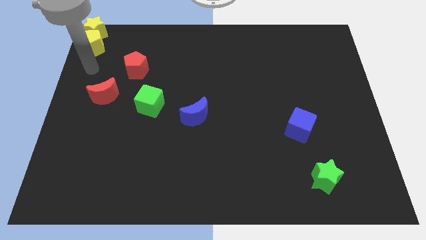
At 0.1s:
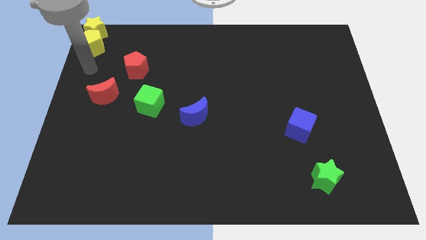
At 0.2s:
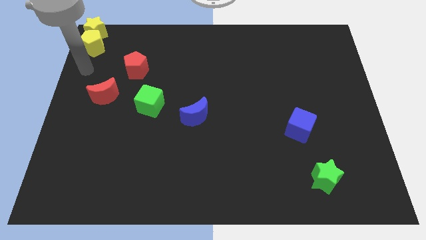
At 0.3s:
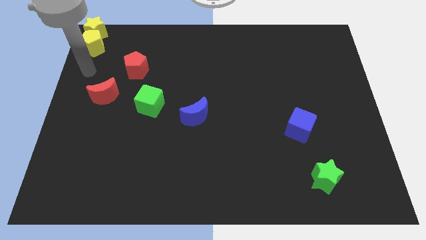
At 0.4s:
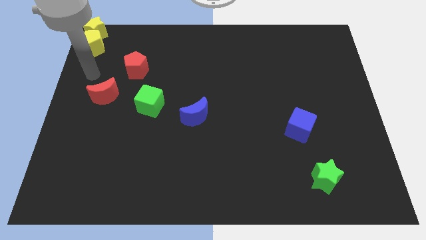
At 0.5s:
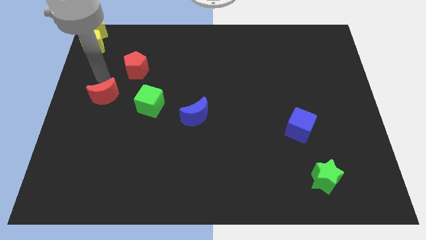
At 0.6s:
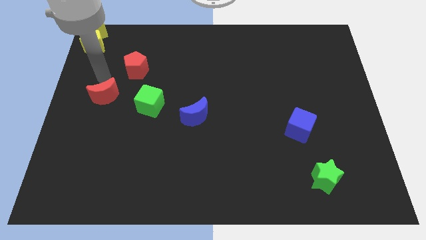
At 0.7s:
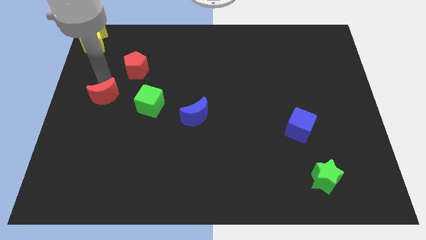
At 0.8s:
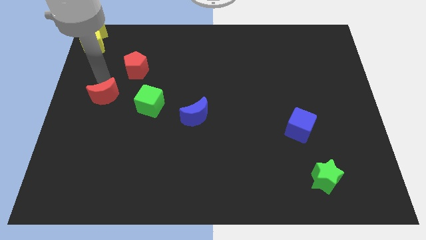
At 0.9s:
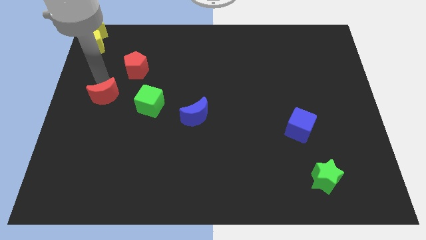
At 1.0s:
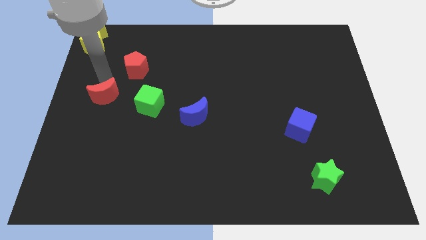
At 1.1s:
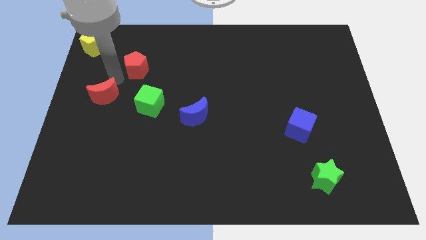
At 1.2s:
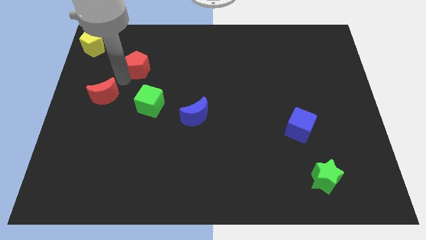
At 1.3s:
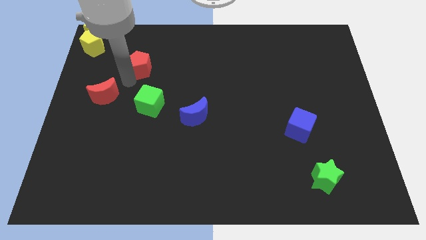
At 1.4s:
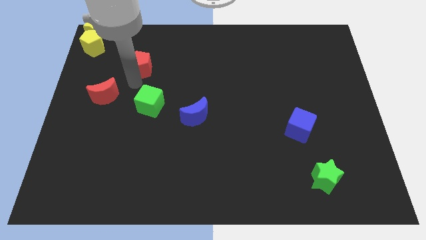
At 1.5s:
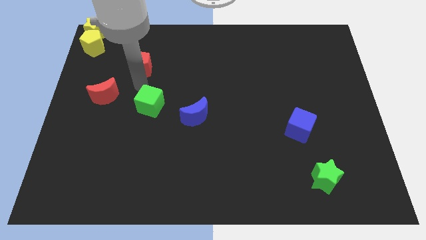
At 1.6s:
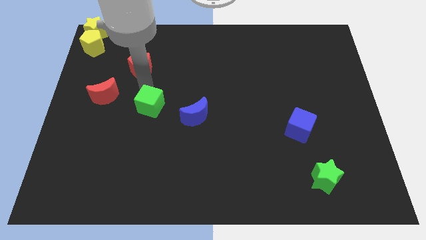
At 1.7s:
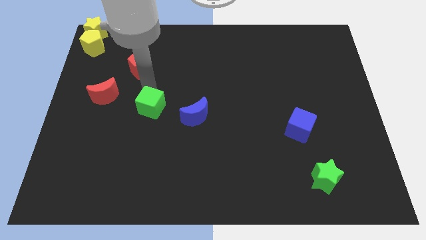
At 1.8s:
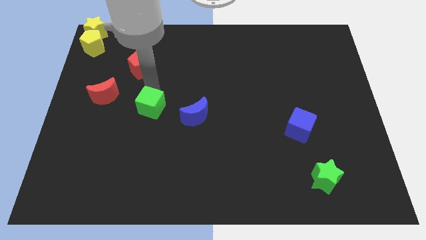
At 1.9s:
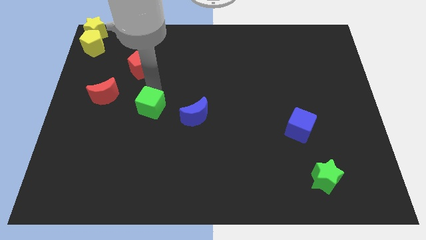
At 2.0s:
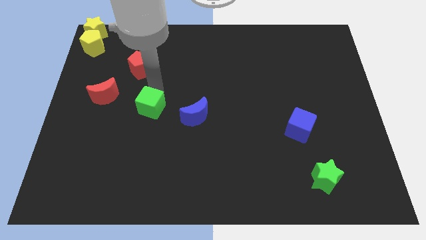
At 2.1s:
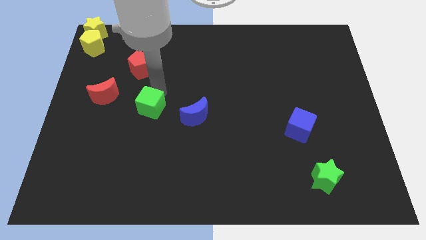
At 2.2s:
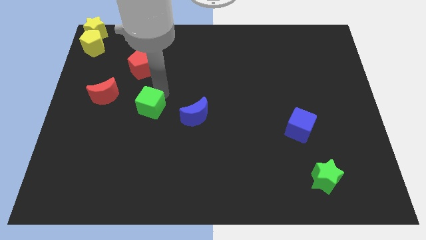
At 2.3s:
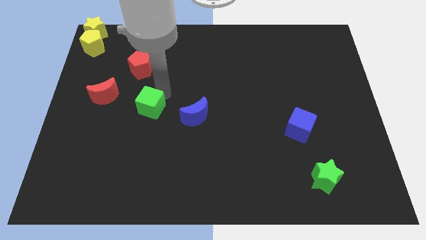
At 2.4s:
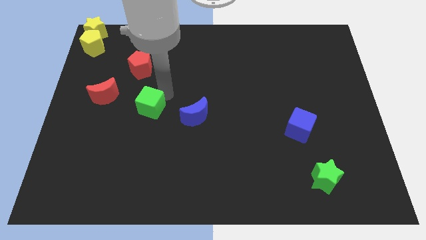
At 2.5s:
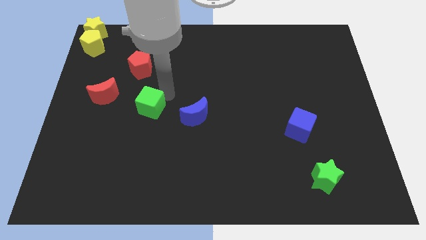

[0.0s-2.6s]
move the arm in between the red crescent and the red pentagon

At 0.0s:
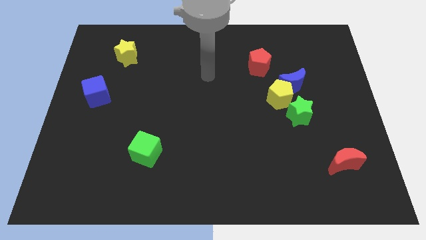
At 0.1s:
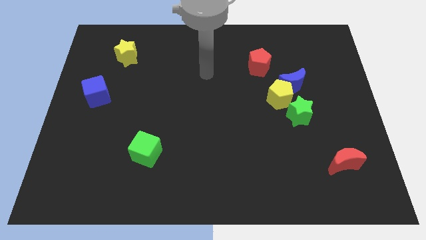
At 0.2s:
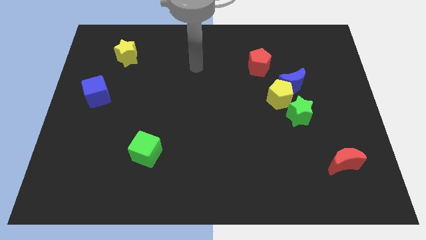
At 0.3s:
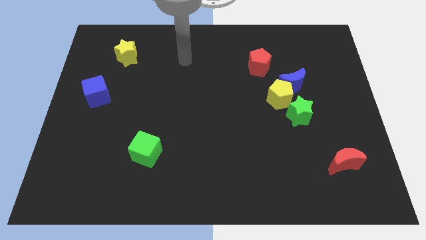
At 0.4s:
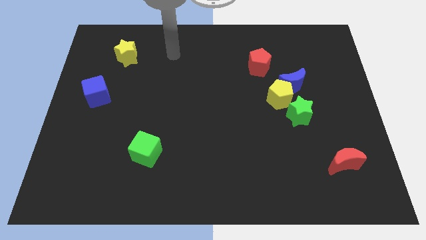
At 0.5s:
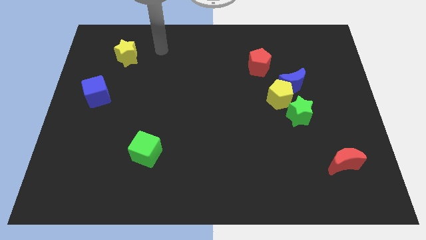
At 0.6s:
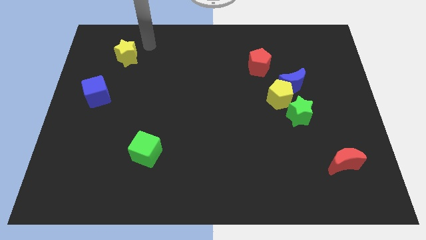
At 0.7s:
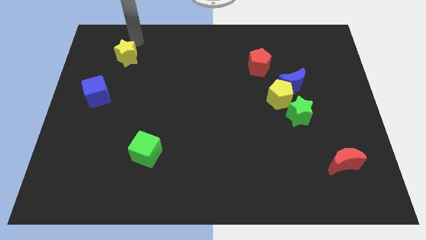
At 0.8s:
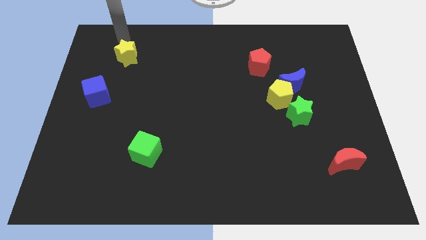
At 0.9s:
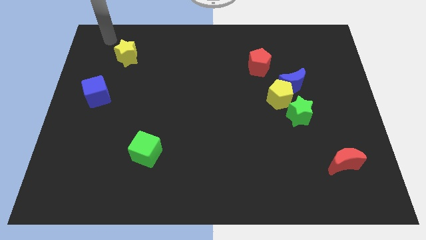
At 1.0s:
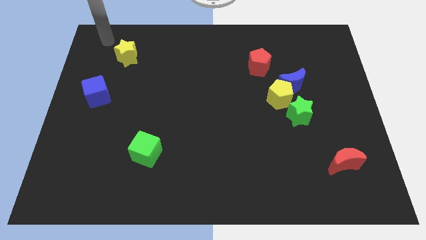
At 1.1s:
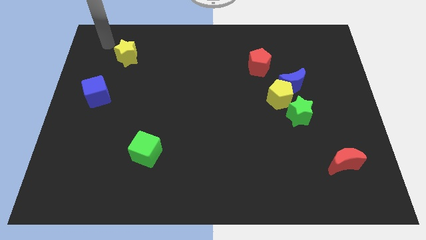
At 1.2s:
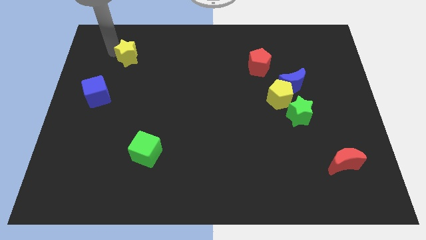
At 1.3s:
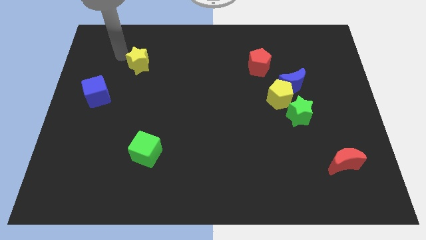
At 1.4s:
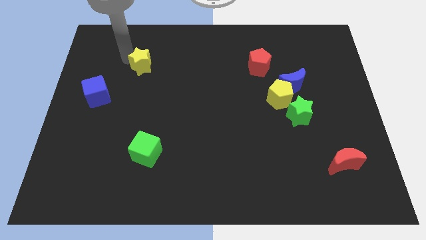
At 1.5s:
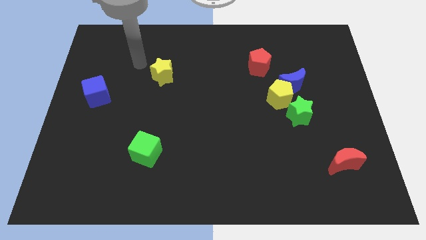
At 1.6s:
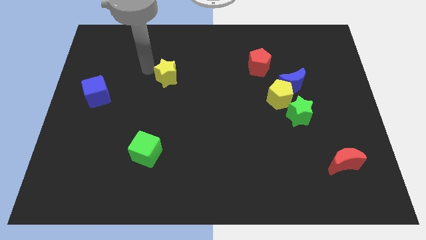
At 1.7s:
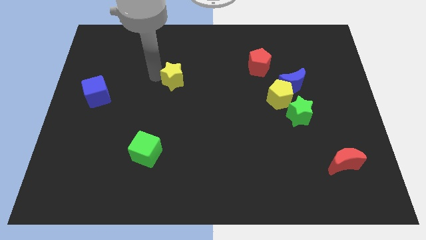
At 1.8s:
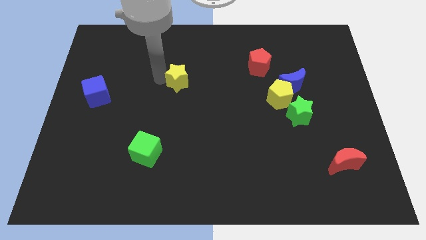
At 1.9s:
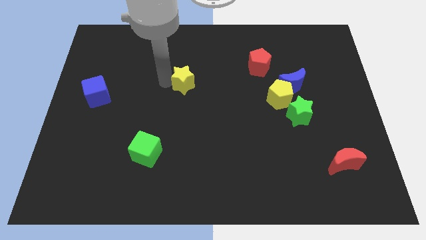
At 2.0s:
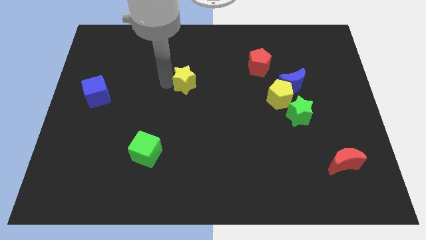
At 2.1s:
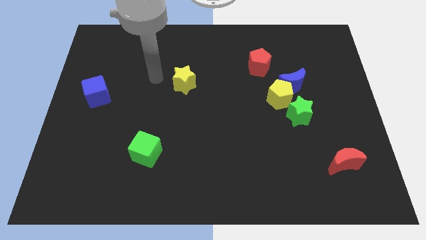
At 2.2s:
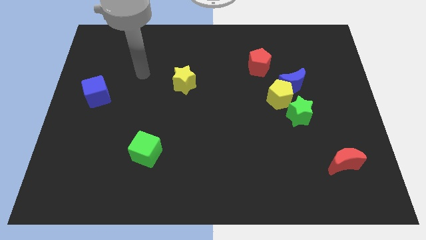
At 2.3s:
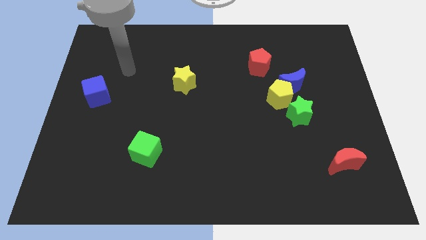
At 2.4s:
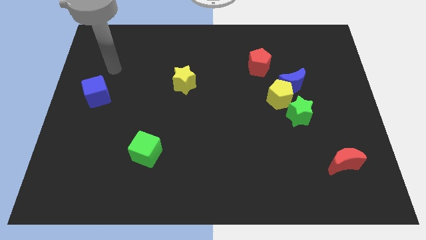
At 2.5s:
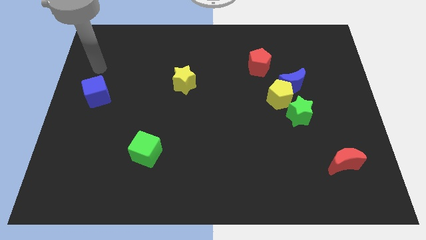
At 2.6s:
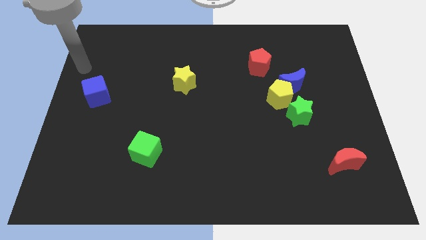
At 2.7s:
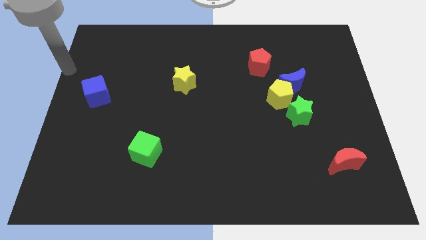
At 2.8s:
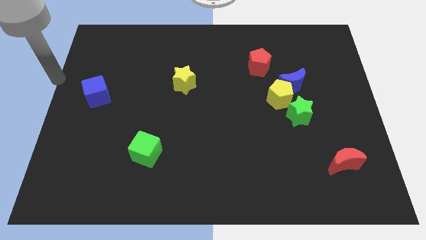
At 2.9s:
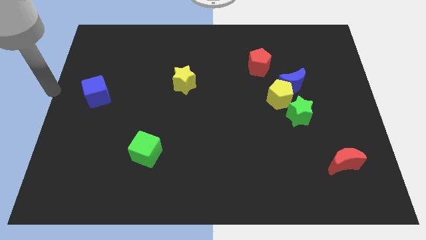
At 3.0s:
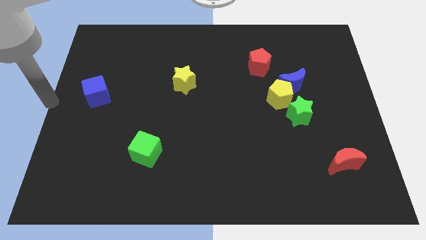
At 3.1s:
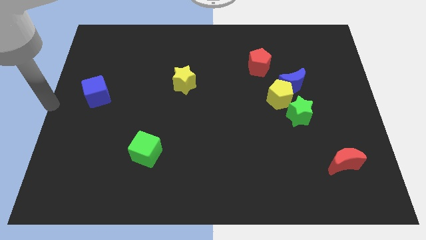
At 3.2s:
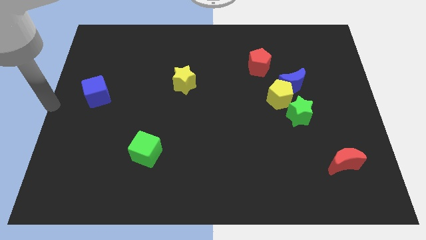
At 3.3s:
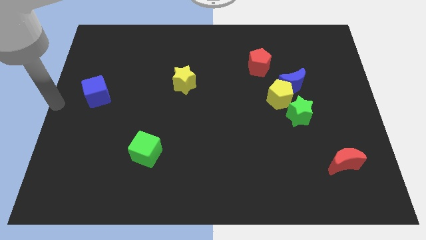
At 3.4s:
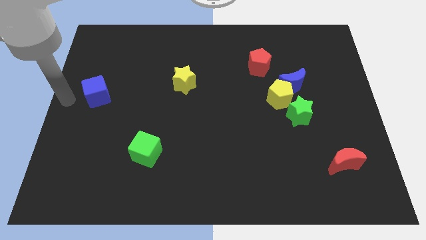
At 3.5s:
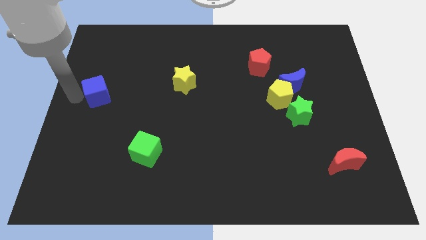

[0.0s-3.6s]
move the yellow star diagonally on the top right side of the green cube

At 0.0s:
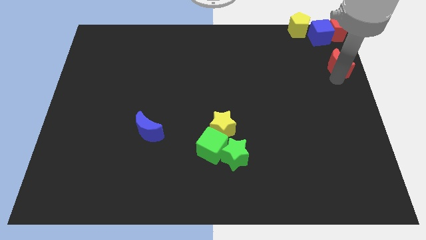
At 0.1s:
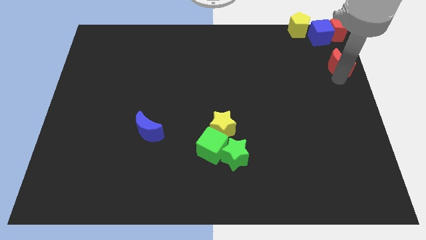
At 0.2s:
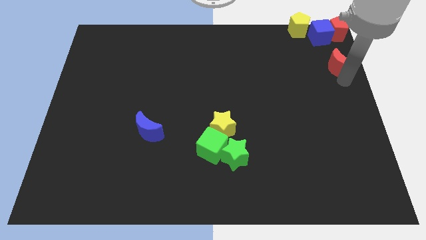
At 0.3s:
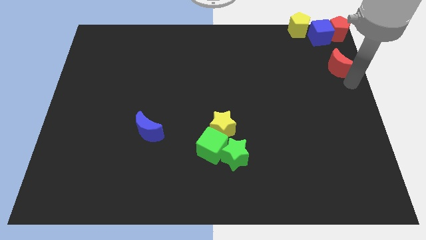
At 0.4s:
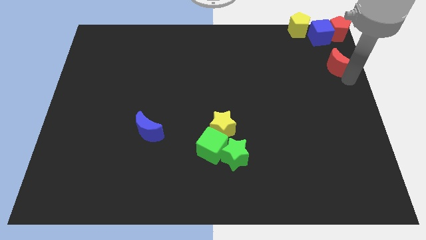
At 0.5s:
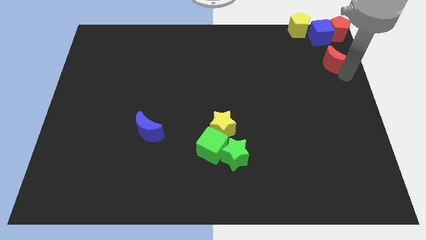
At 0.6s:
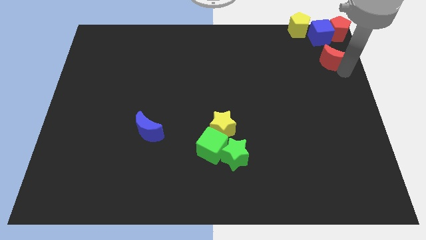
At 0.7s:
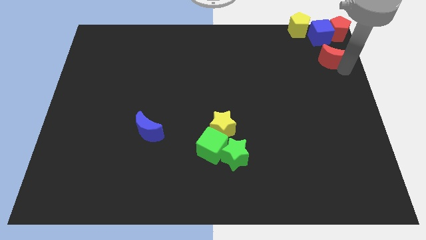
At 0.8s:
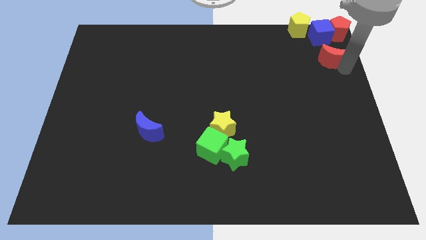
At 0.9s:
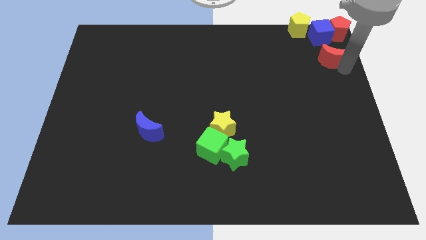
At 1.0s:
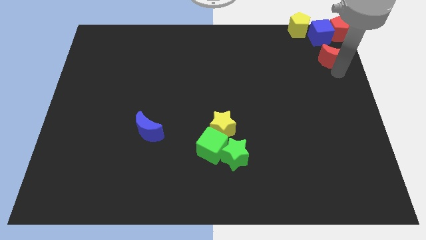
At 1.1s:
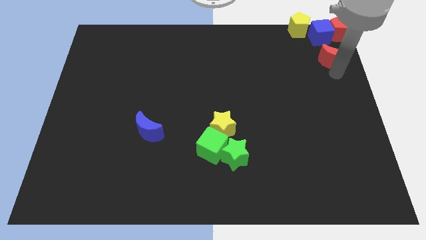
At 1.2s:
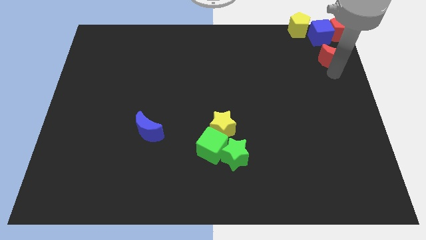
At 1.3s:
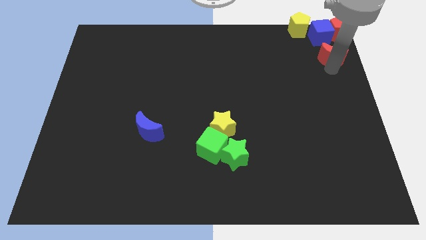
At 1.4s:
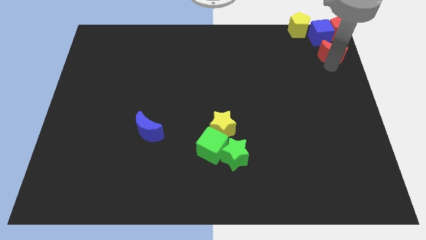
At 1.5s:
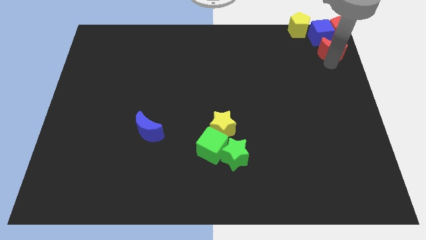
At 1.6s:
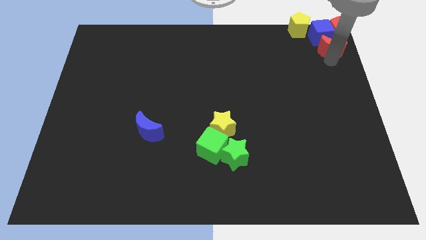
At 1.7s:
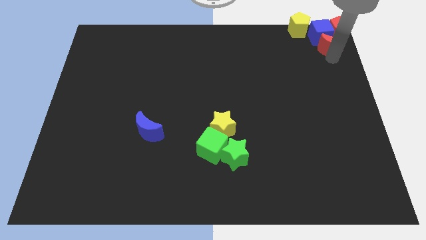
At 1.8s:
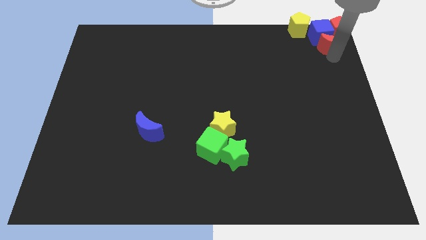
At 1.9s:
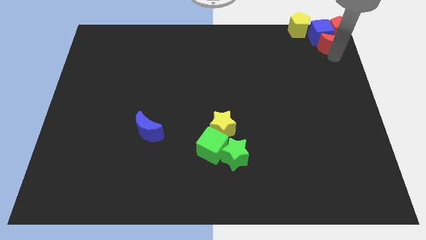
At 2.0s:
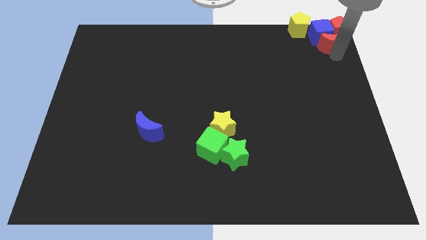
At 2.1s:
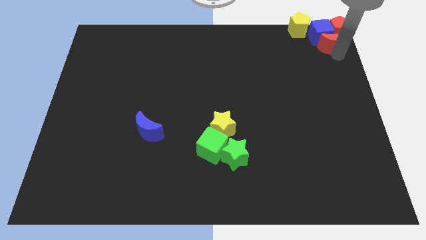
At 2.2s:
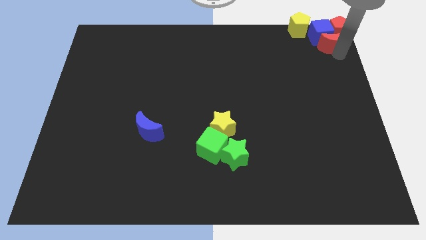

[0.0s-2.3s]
place the red crescent to bottom of blue cube

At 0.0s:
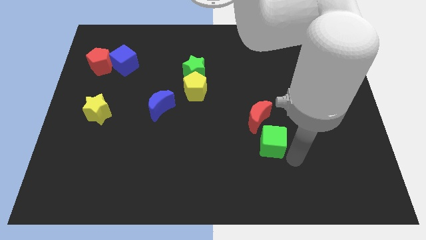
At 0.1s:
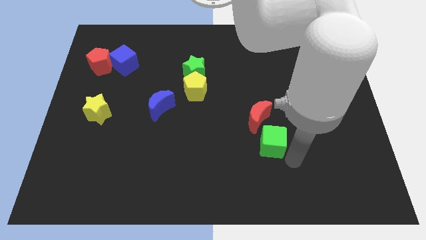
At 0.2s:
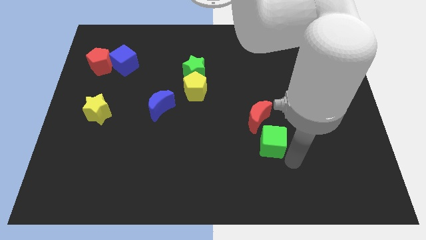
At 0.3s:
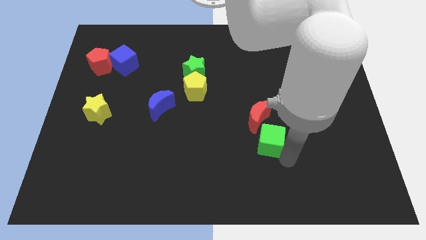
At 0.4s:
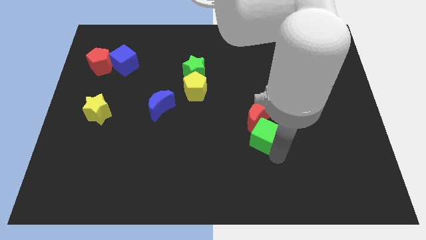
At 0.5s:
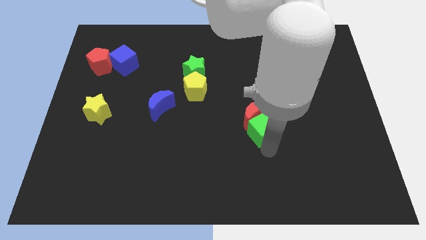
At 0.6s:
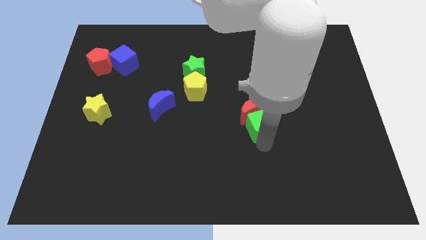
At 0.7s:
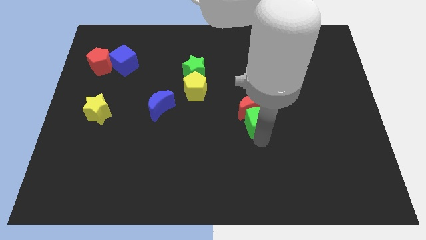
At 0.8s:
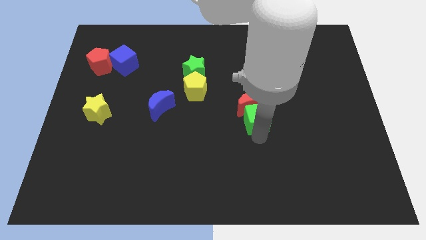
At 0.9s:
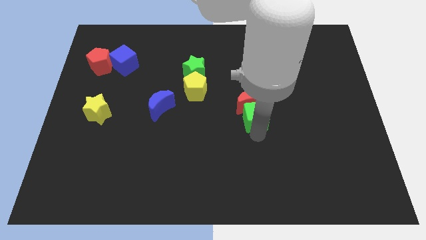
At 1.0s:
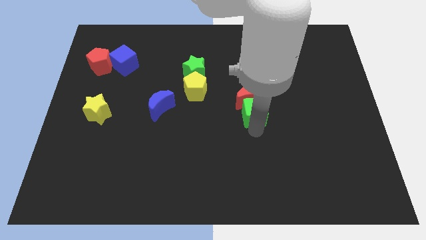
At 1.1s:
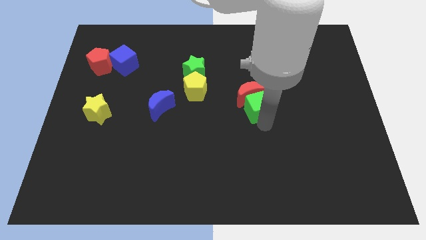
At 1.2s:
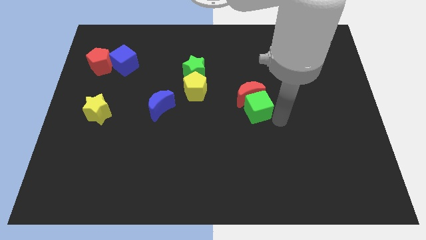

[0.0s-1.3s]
push the red crescent towards the center of the board using the green cube
